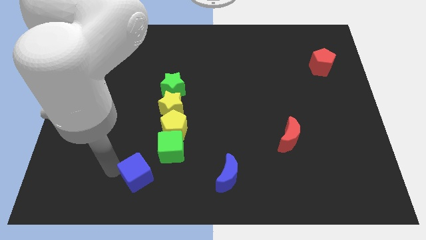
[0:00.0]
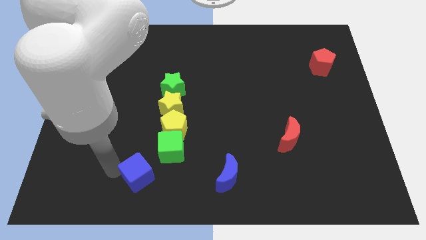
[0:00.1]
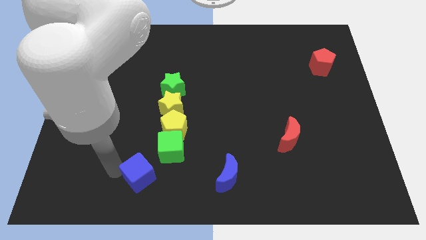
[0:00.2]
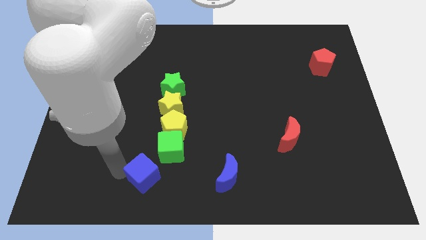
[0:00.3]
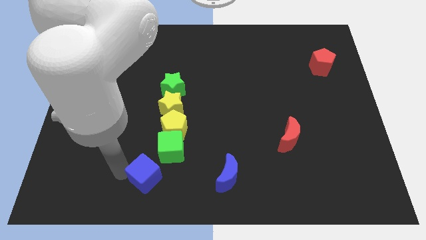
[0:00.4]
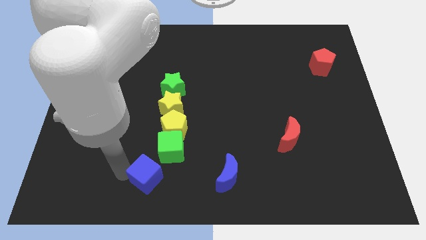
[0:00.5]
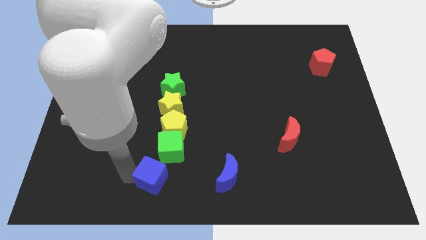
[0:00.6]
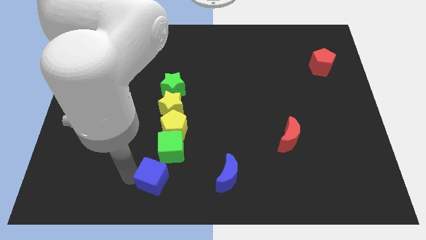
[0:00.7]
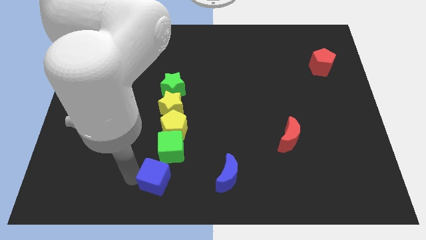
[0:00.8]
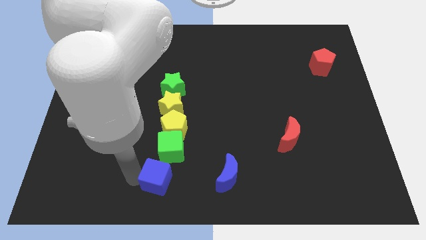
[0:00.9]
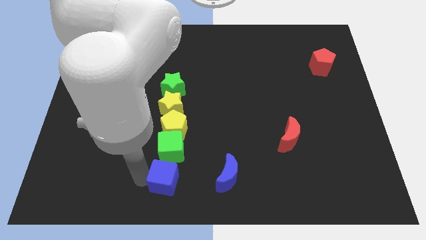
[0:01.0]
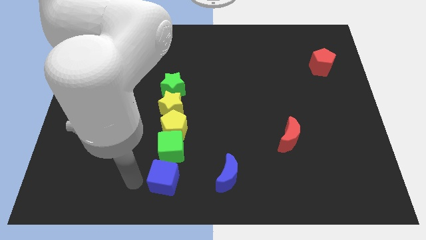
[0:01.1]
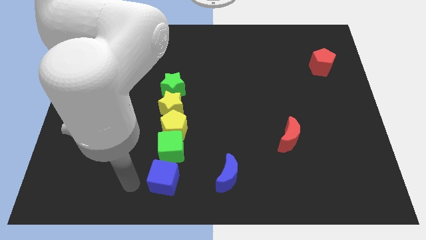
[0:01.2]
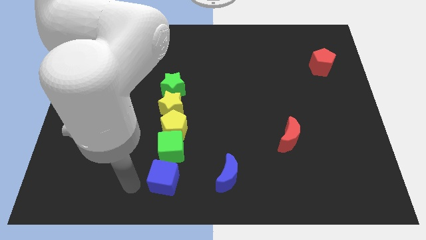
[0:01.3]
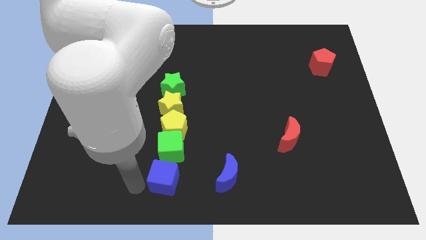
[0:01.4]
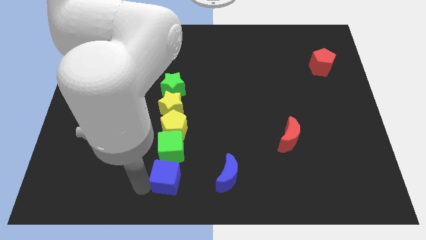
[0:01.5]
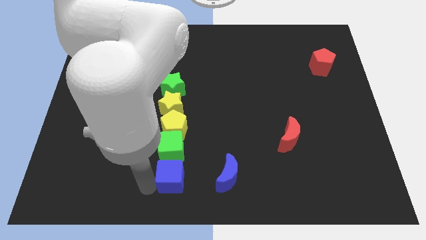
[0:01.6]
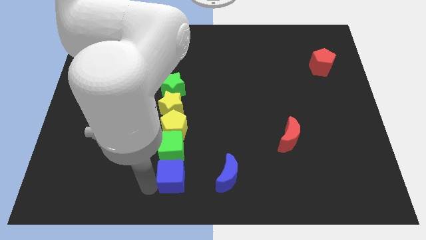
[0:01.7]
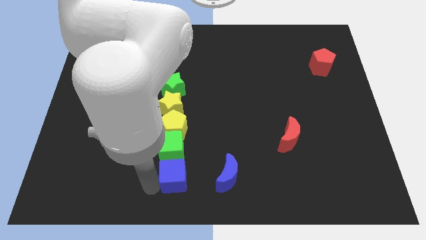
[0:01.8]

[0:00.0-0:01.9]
put the blue cube at the bottom of the green cube

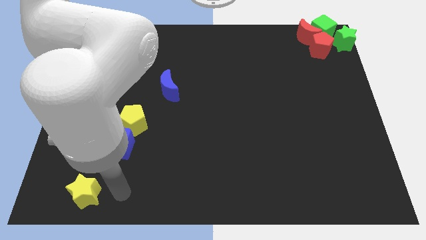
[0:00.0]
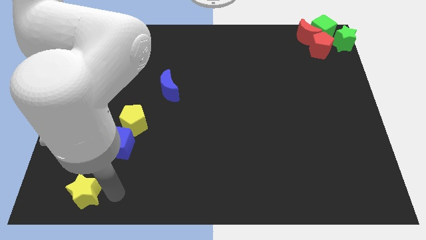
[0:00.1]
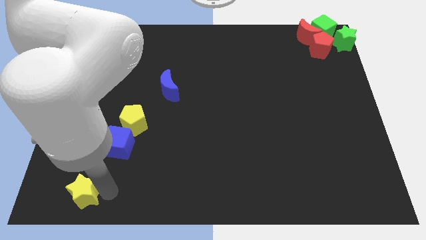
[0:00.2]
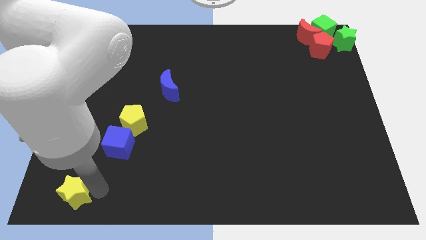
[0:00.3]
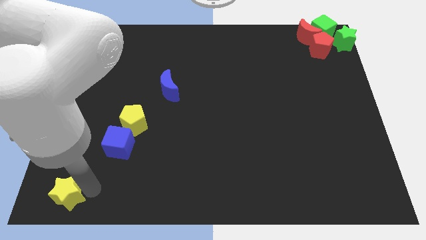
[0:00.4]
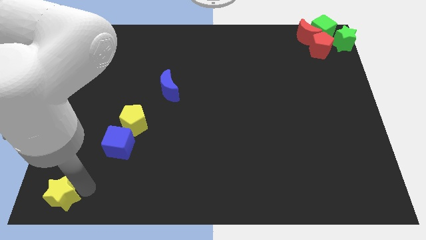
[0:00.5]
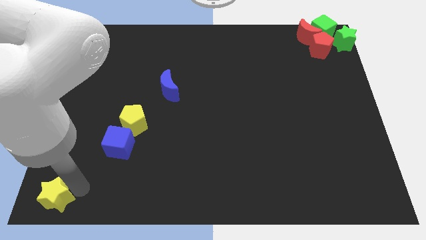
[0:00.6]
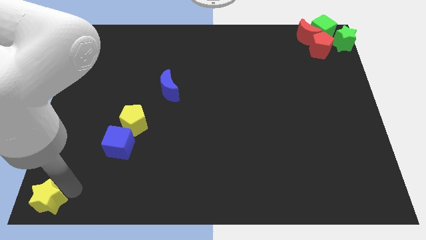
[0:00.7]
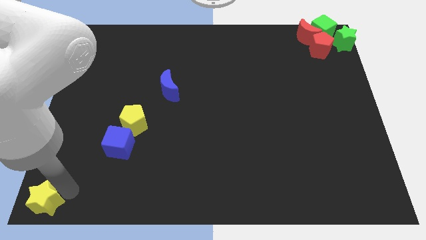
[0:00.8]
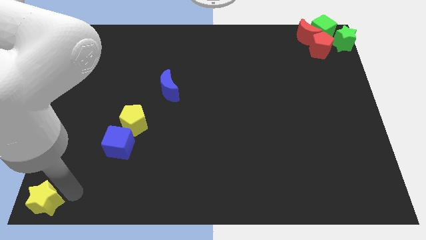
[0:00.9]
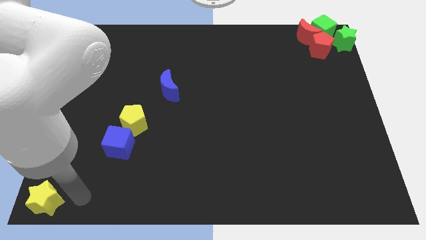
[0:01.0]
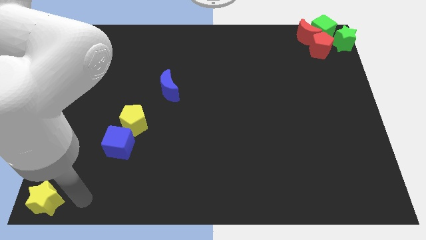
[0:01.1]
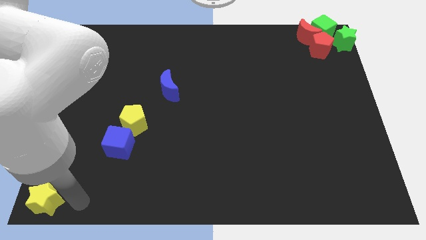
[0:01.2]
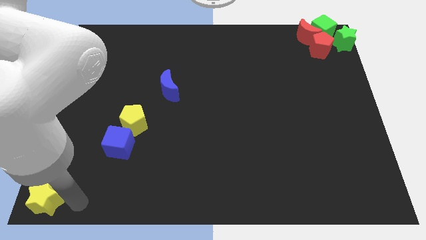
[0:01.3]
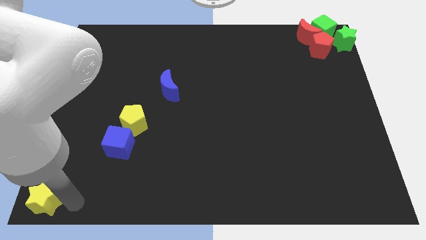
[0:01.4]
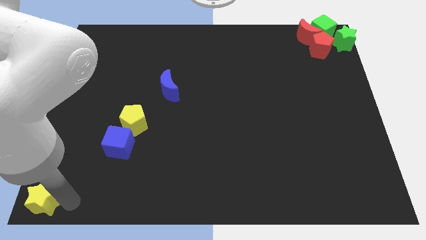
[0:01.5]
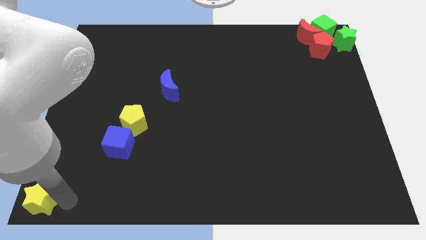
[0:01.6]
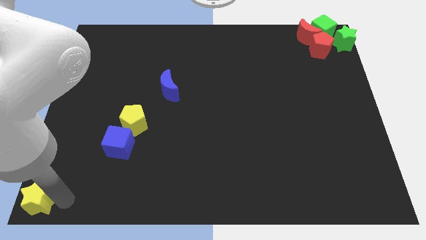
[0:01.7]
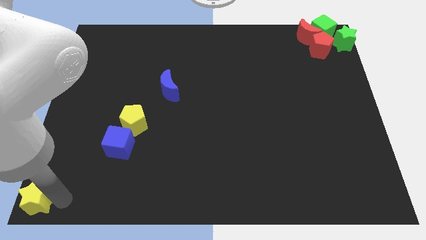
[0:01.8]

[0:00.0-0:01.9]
push the yellow star to the bottom left corner of the board

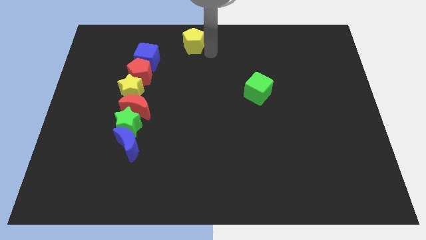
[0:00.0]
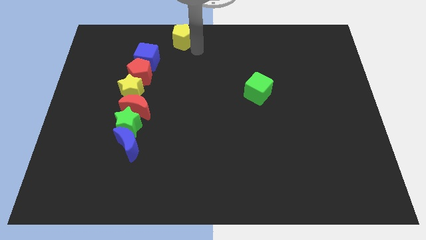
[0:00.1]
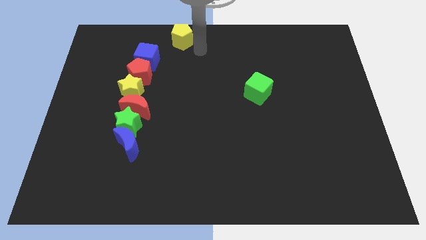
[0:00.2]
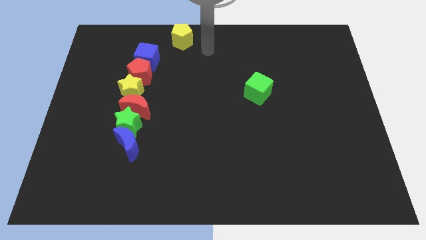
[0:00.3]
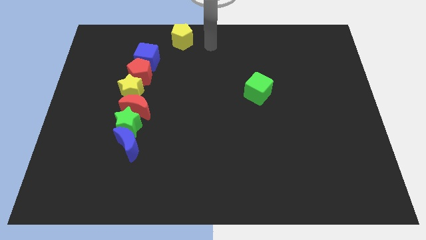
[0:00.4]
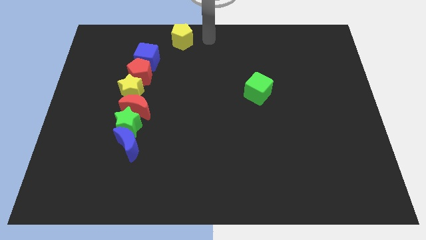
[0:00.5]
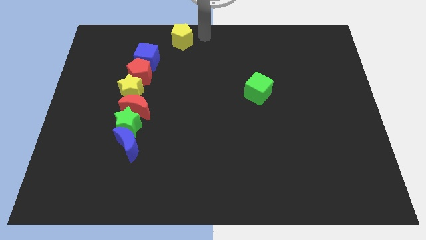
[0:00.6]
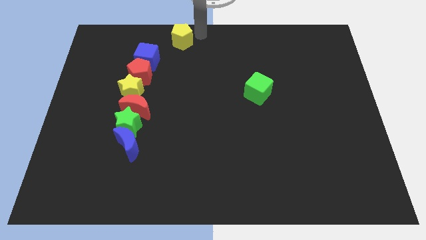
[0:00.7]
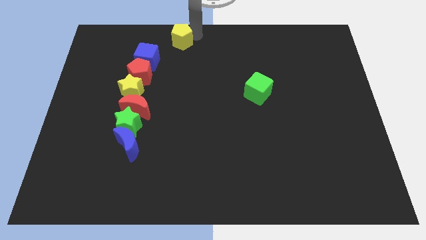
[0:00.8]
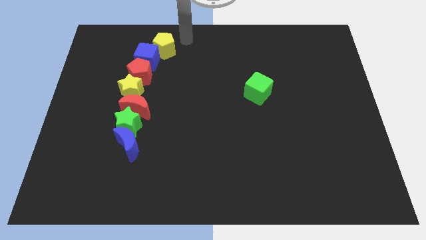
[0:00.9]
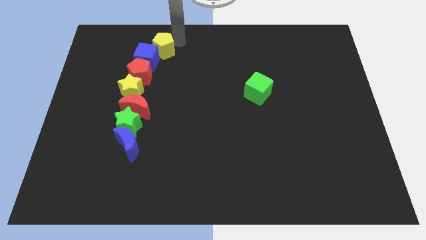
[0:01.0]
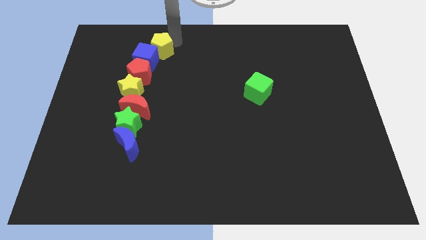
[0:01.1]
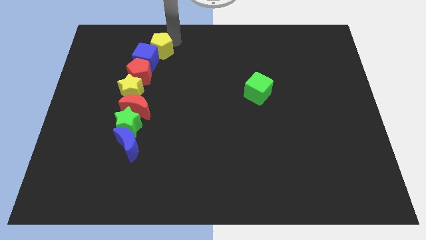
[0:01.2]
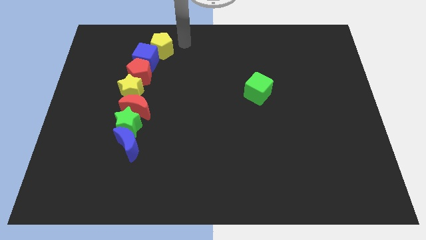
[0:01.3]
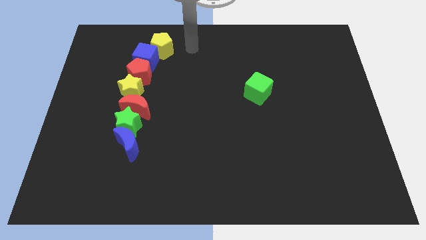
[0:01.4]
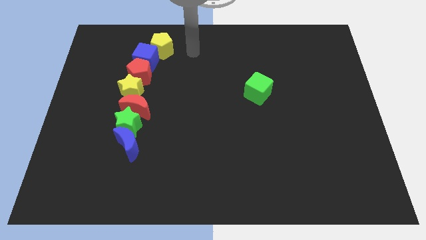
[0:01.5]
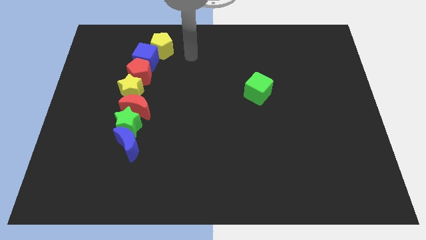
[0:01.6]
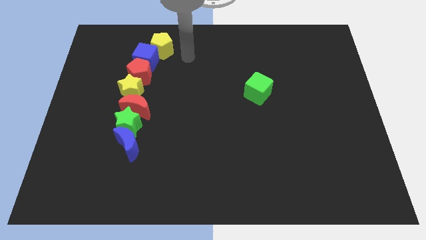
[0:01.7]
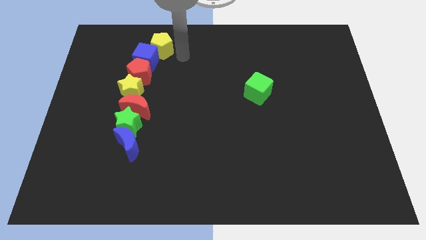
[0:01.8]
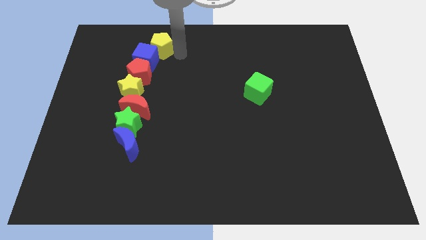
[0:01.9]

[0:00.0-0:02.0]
attach the yellow pentagon to the blue cube

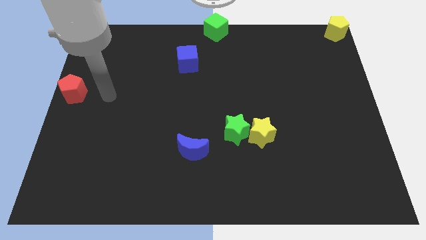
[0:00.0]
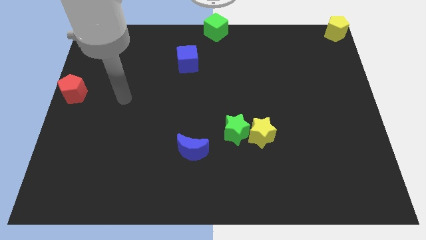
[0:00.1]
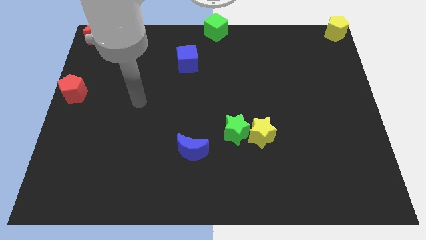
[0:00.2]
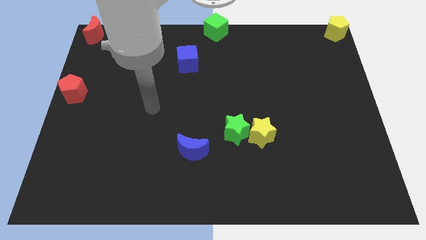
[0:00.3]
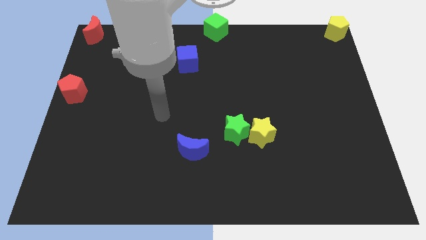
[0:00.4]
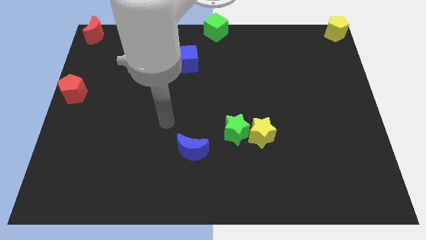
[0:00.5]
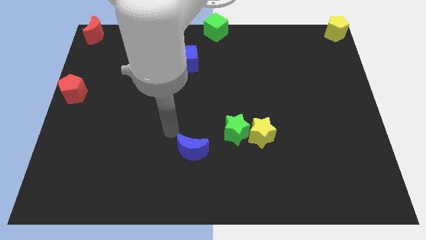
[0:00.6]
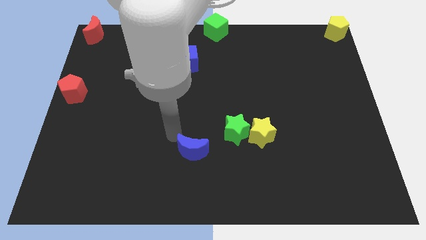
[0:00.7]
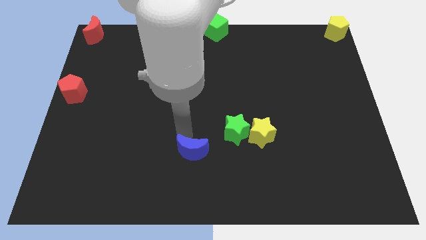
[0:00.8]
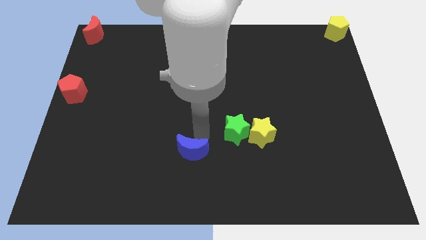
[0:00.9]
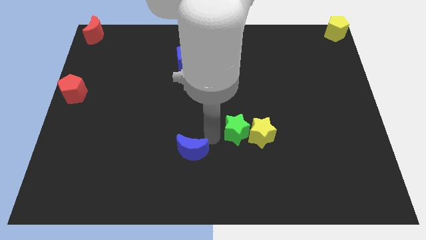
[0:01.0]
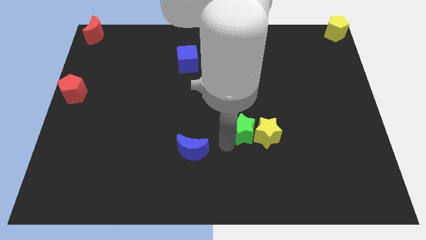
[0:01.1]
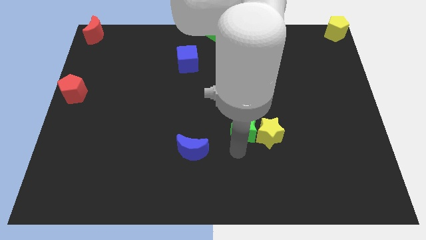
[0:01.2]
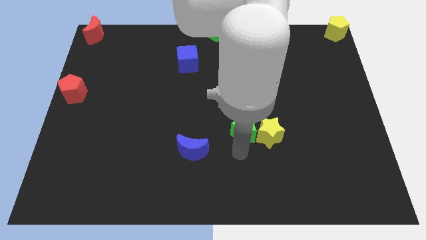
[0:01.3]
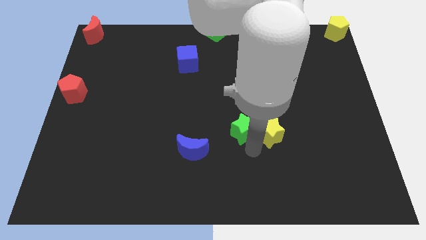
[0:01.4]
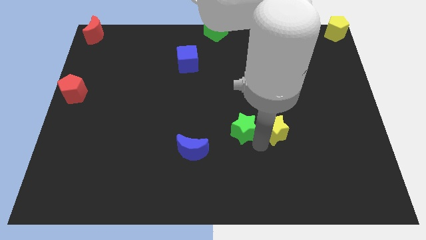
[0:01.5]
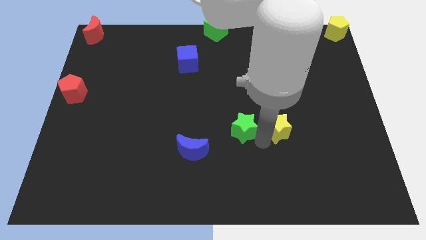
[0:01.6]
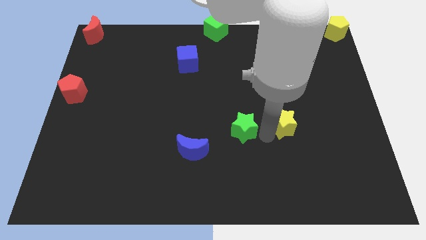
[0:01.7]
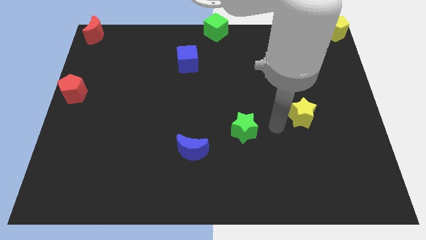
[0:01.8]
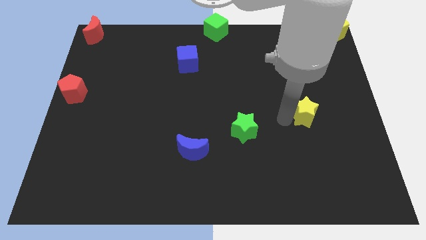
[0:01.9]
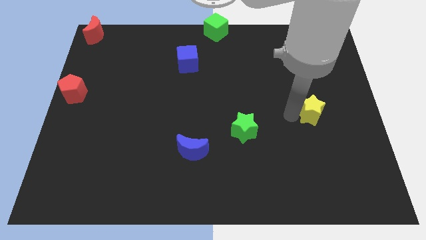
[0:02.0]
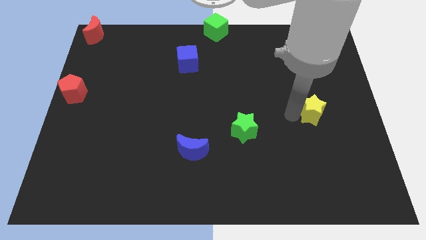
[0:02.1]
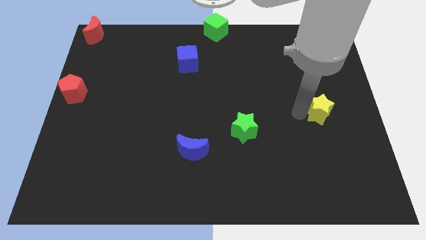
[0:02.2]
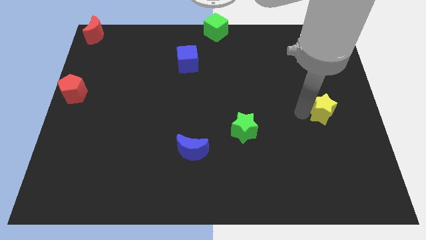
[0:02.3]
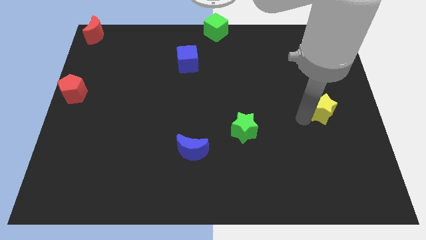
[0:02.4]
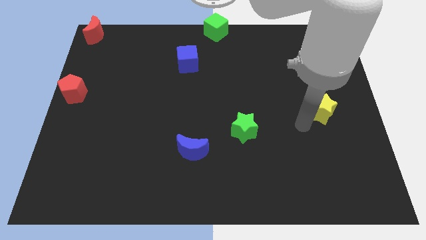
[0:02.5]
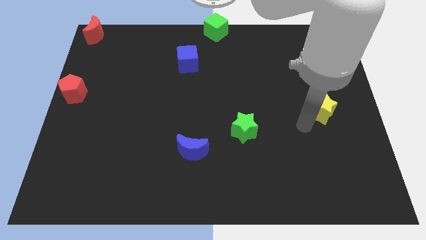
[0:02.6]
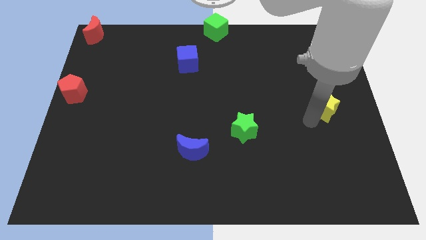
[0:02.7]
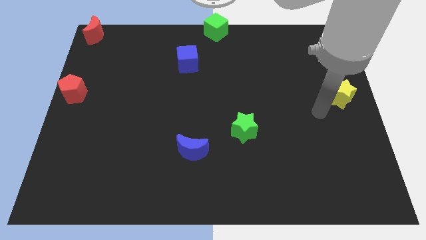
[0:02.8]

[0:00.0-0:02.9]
separate the green star and the yellow star

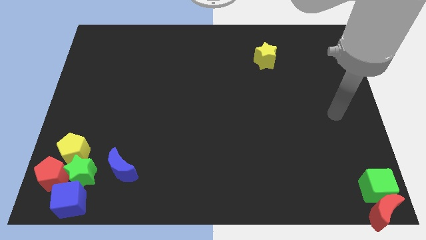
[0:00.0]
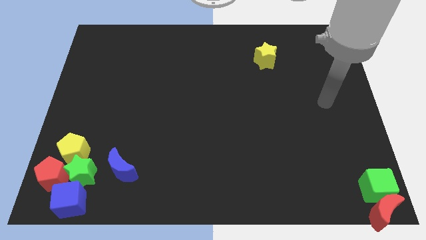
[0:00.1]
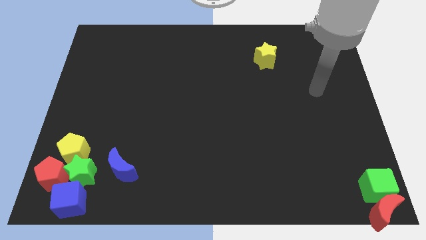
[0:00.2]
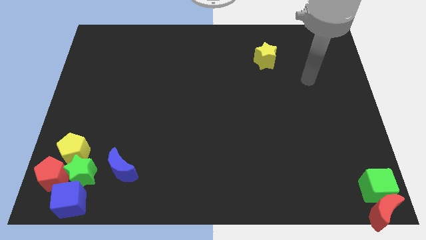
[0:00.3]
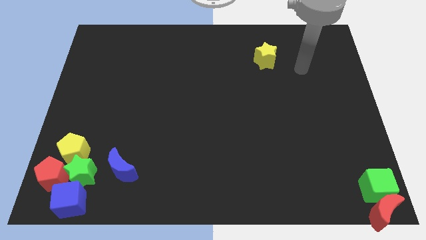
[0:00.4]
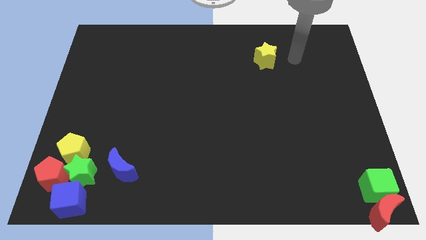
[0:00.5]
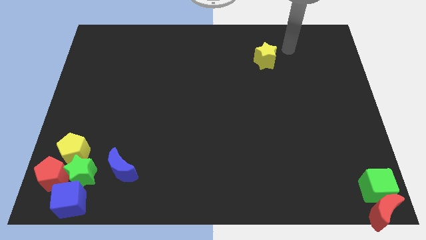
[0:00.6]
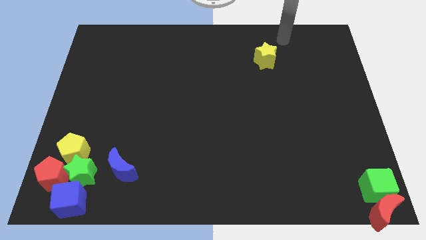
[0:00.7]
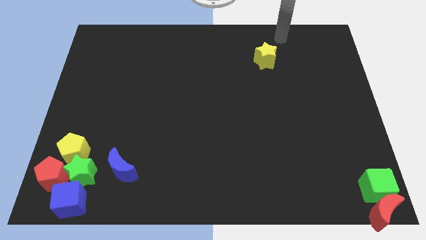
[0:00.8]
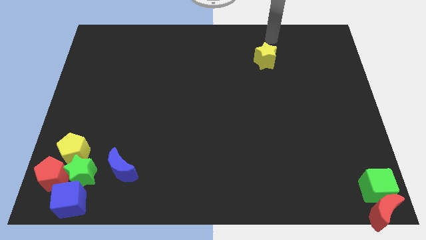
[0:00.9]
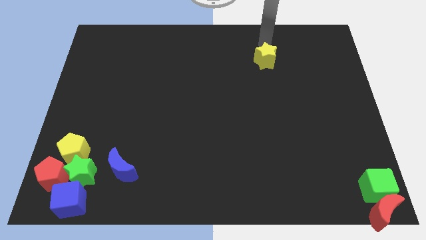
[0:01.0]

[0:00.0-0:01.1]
move your arm on top of yellow star
